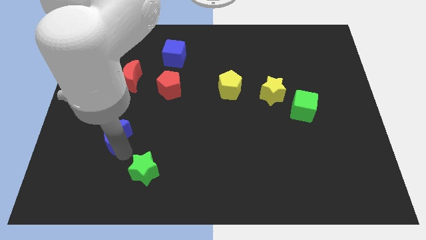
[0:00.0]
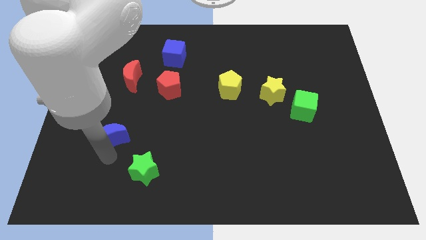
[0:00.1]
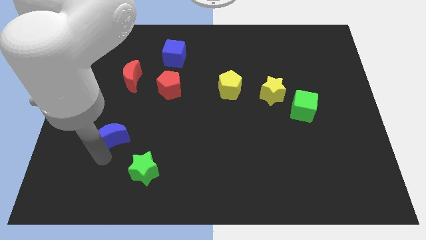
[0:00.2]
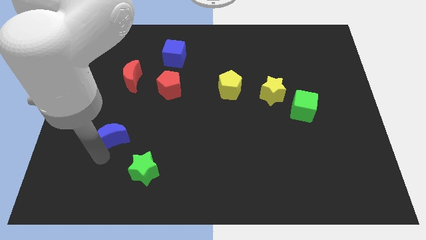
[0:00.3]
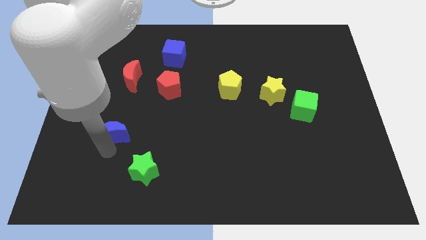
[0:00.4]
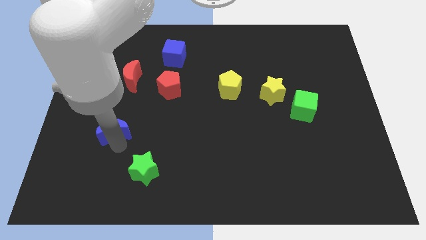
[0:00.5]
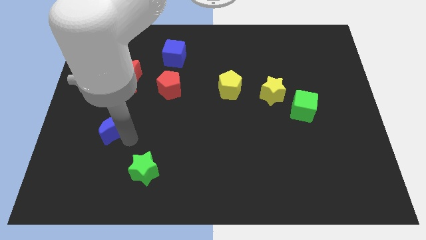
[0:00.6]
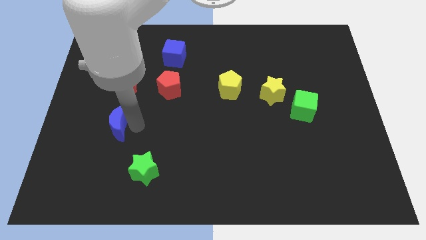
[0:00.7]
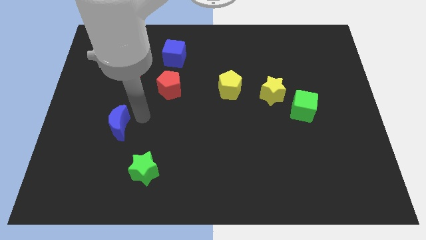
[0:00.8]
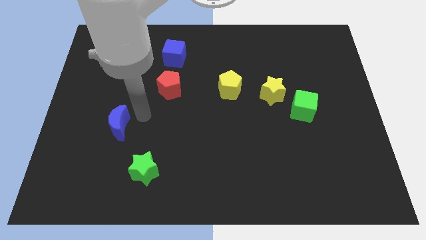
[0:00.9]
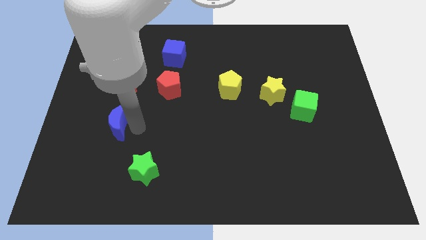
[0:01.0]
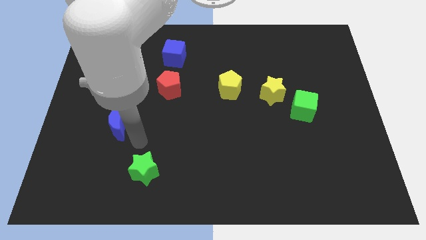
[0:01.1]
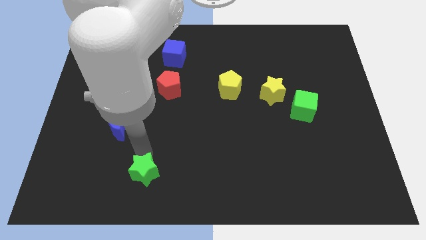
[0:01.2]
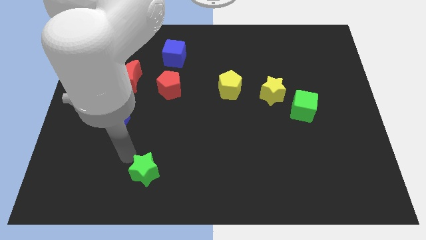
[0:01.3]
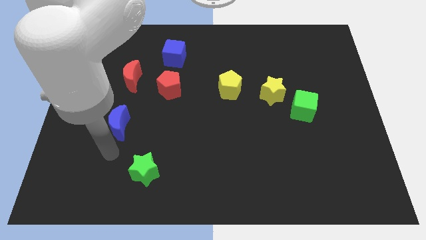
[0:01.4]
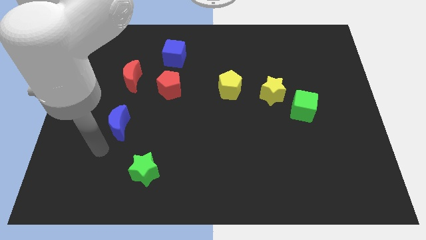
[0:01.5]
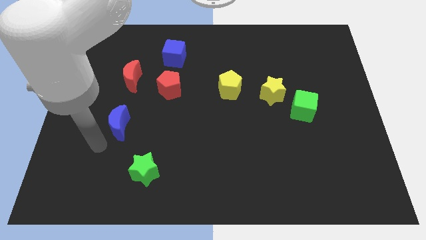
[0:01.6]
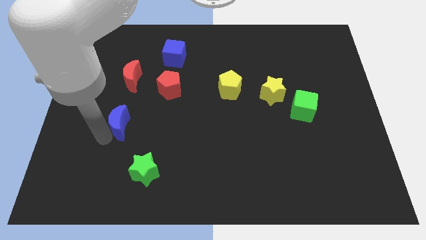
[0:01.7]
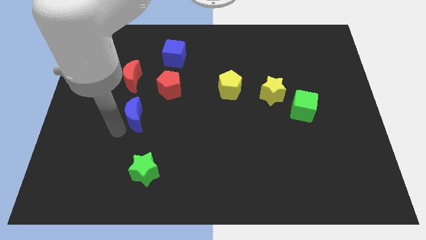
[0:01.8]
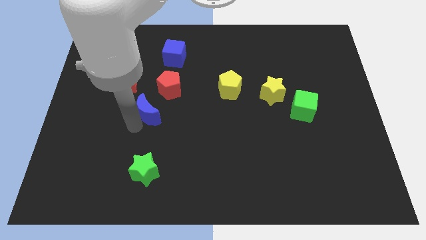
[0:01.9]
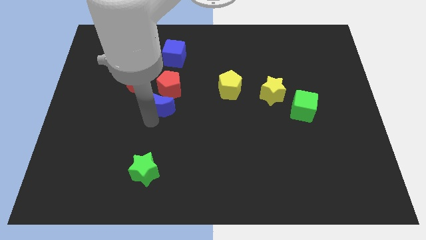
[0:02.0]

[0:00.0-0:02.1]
place the blue crescent above the green star

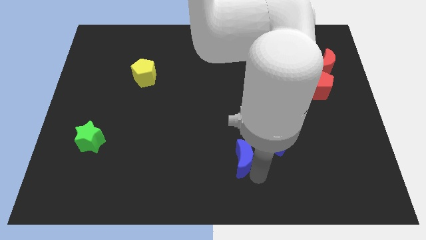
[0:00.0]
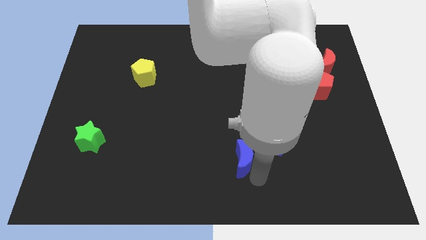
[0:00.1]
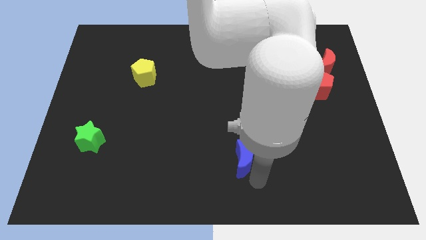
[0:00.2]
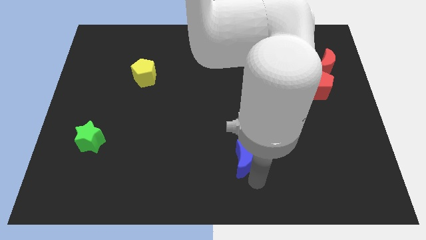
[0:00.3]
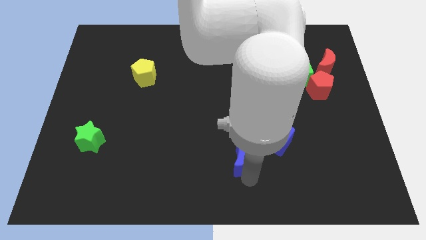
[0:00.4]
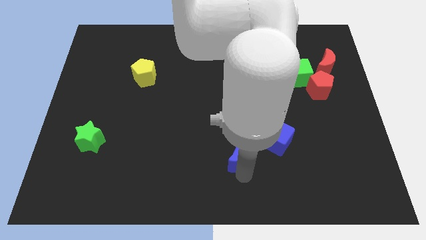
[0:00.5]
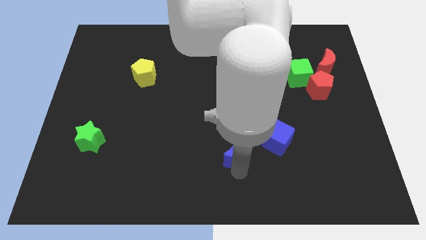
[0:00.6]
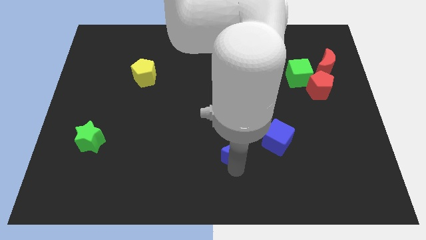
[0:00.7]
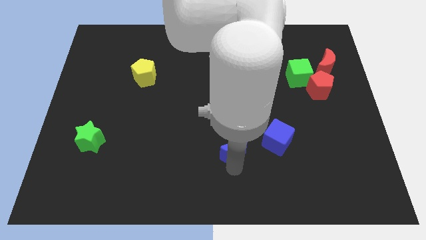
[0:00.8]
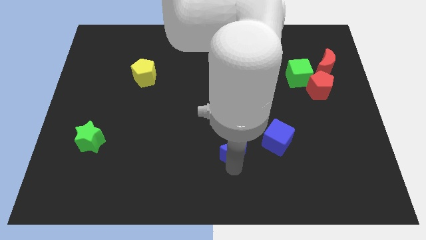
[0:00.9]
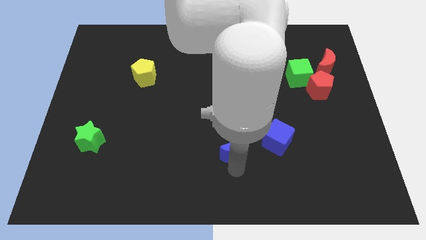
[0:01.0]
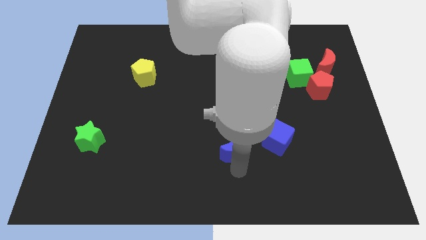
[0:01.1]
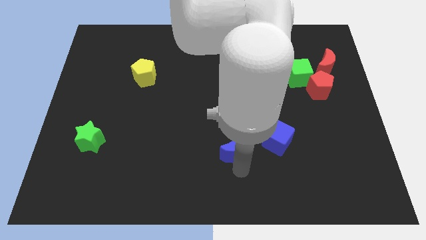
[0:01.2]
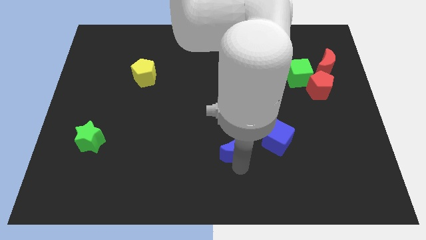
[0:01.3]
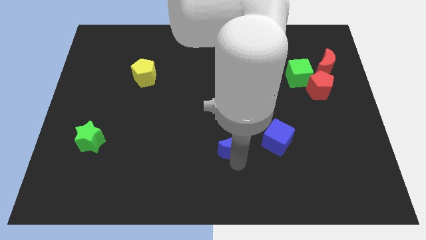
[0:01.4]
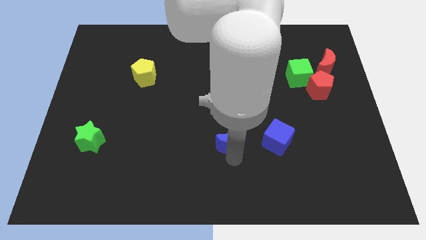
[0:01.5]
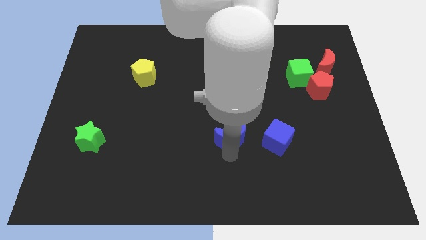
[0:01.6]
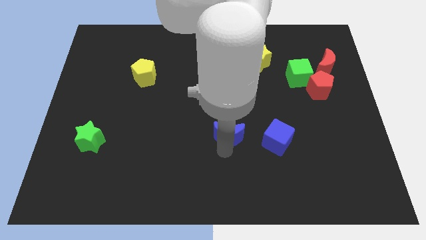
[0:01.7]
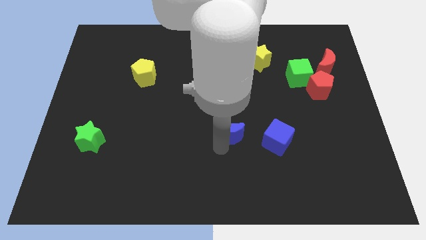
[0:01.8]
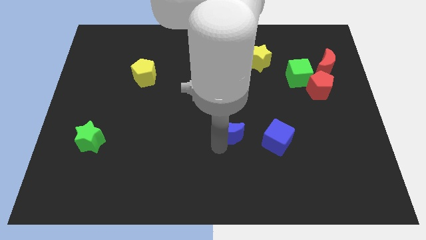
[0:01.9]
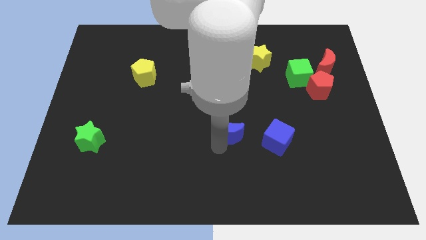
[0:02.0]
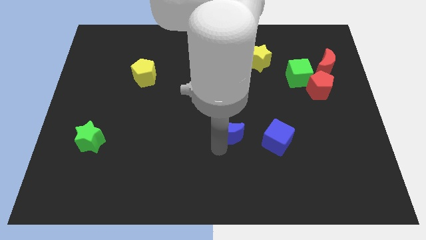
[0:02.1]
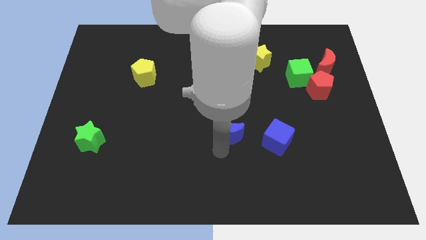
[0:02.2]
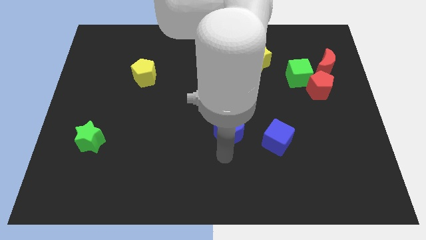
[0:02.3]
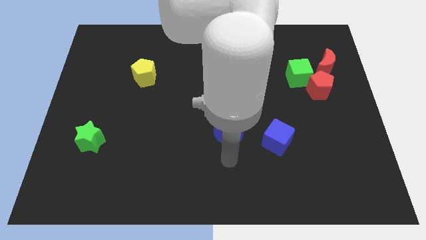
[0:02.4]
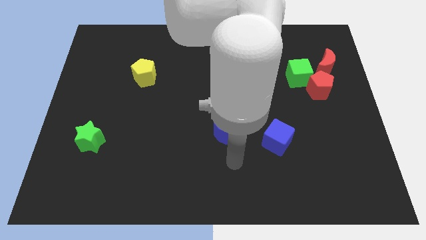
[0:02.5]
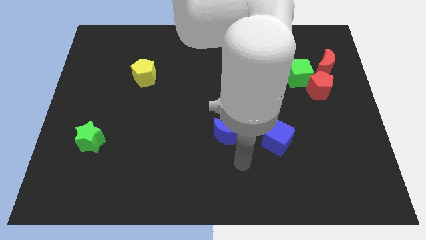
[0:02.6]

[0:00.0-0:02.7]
put the blue crescent left side to the blue cube

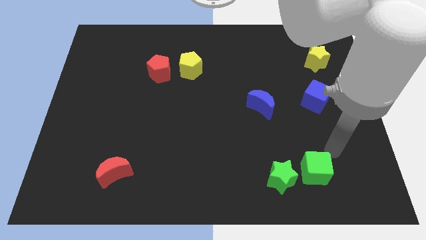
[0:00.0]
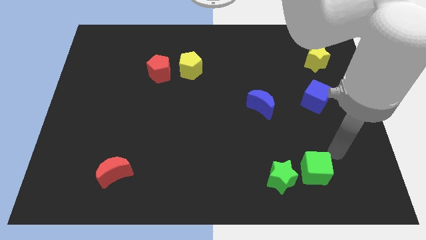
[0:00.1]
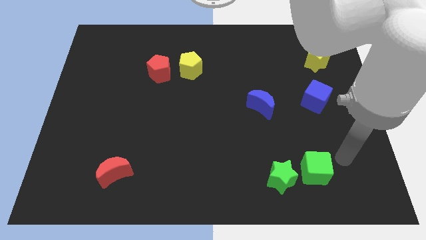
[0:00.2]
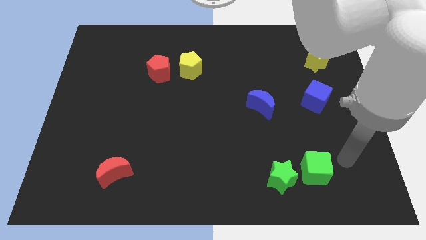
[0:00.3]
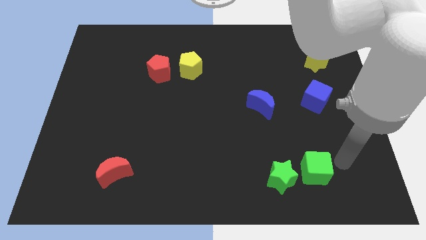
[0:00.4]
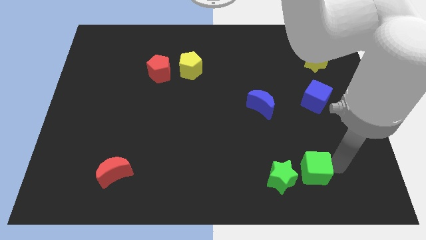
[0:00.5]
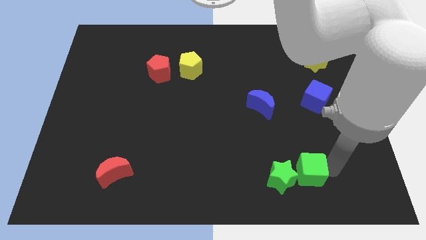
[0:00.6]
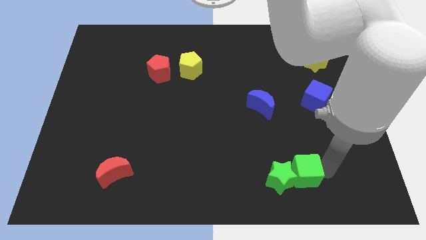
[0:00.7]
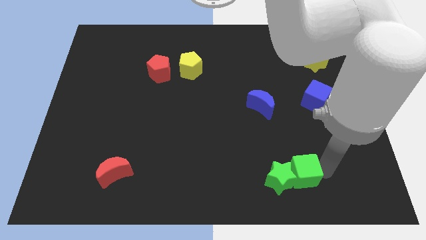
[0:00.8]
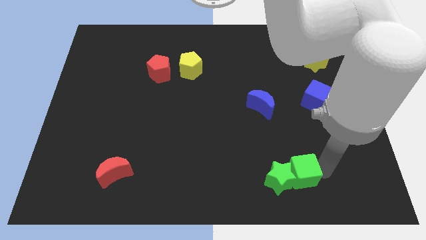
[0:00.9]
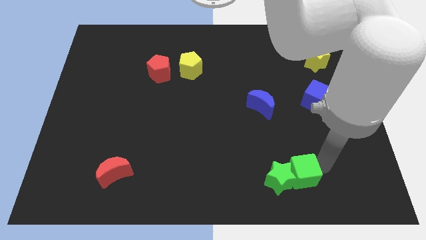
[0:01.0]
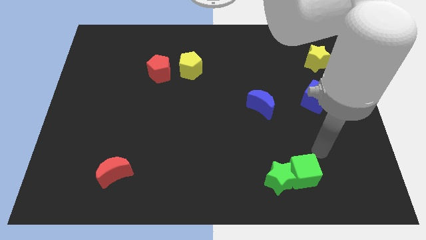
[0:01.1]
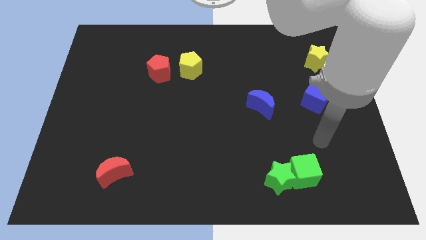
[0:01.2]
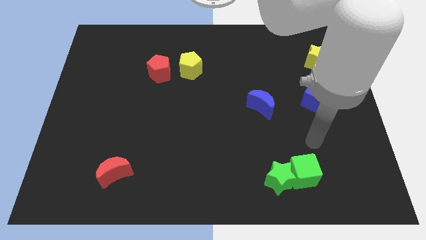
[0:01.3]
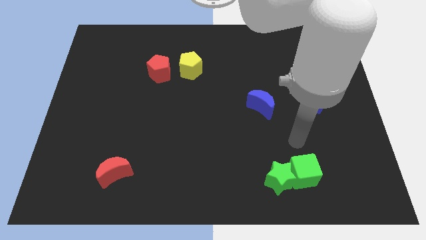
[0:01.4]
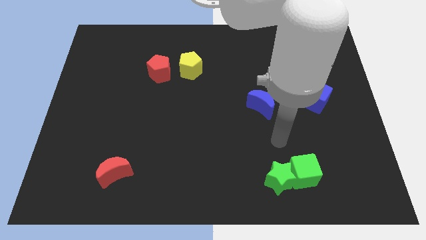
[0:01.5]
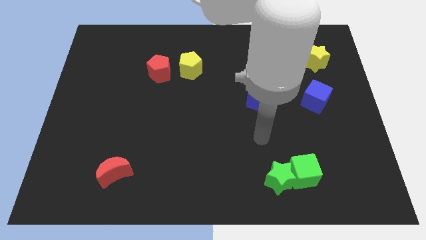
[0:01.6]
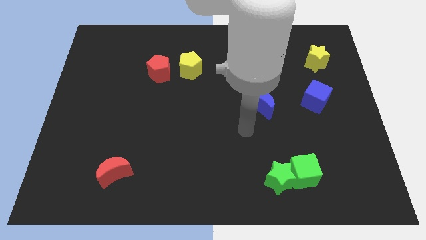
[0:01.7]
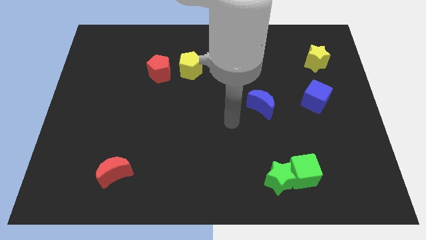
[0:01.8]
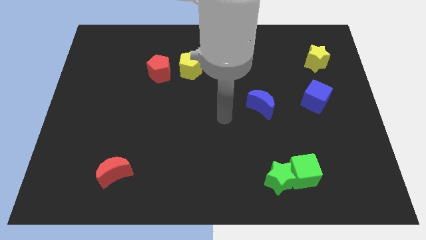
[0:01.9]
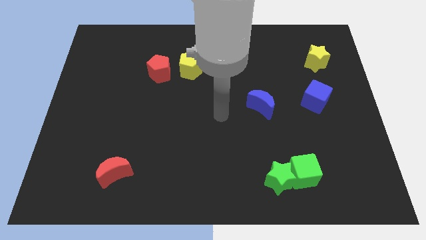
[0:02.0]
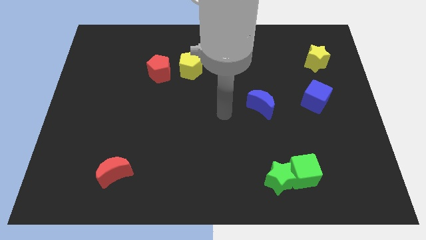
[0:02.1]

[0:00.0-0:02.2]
move your arm away from green cube

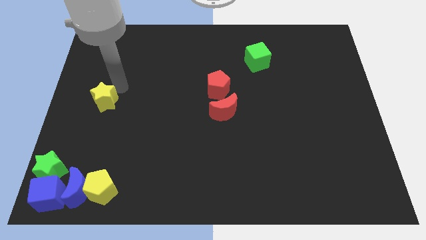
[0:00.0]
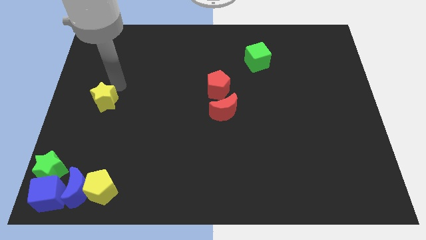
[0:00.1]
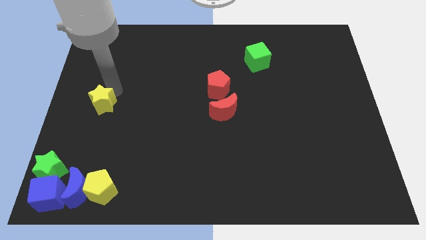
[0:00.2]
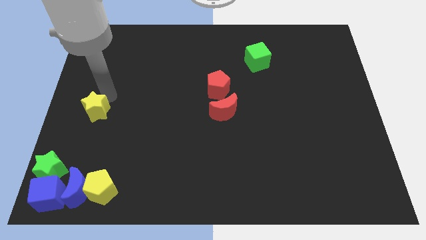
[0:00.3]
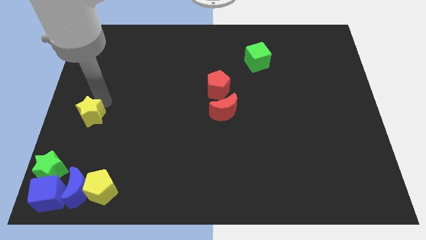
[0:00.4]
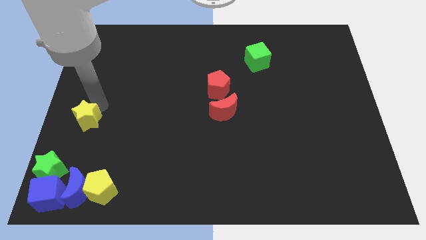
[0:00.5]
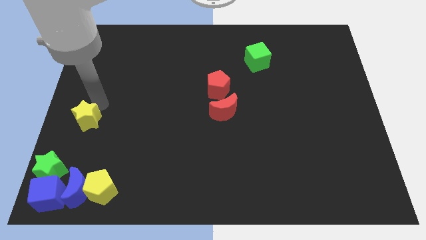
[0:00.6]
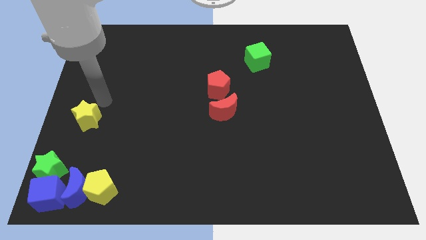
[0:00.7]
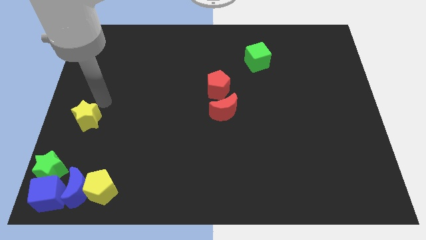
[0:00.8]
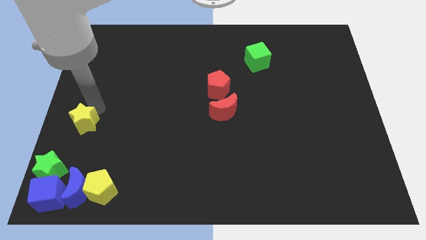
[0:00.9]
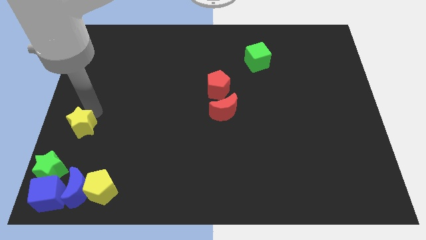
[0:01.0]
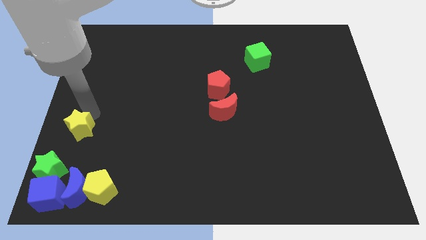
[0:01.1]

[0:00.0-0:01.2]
push yellow star above blue crescent

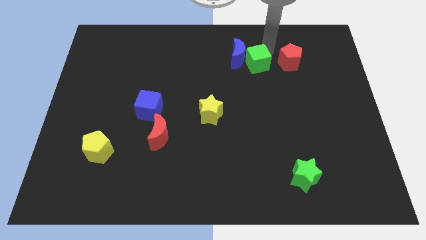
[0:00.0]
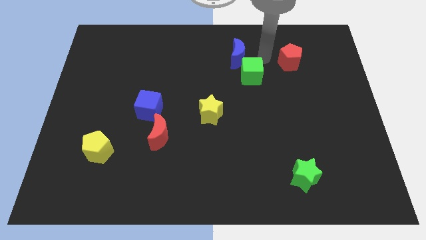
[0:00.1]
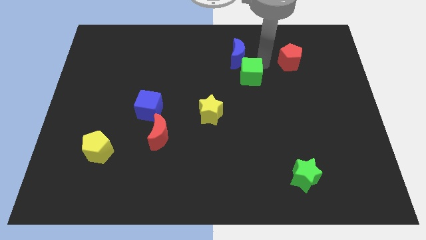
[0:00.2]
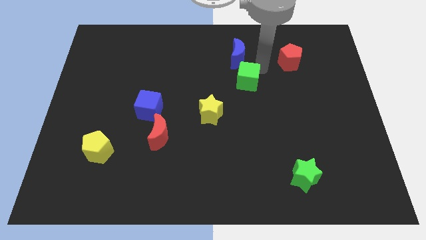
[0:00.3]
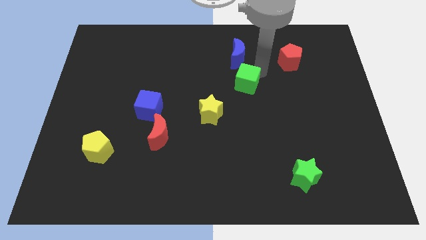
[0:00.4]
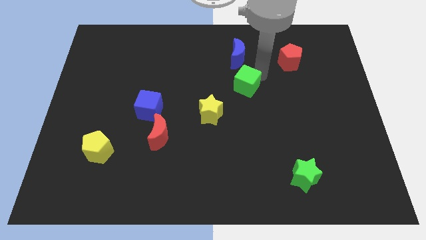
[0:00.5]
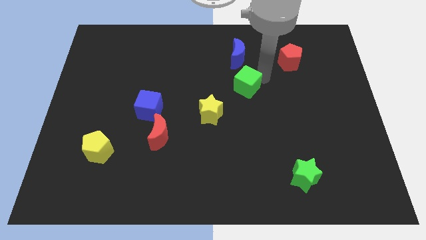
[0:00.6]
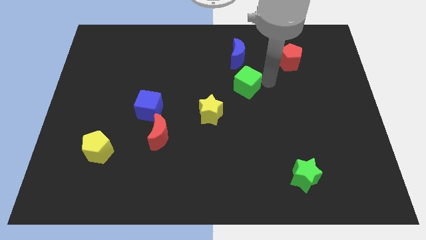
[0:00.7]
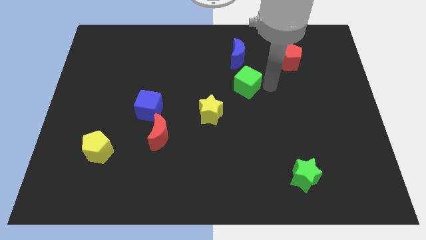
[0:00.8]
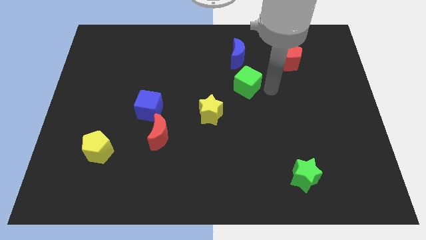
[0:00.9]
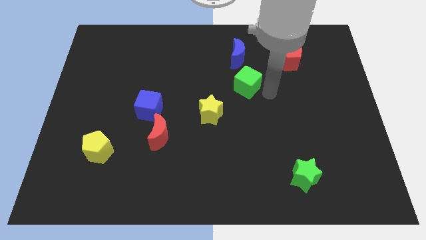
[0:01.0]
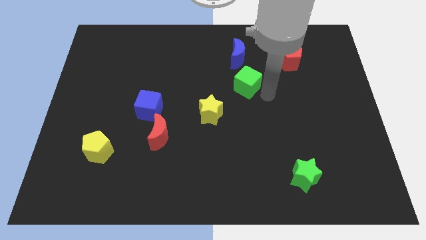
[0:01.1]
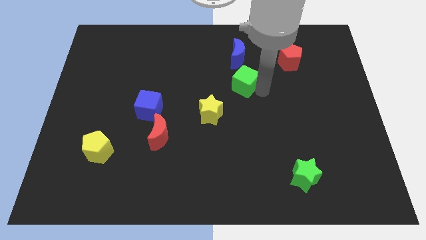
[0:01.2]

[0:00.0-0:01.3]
separate green star from blue crescent
